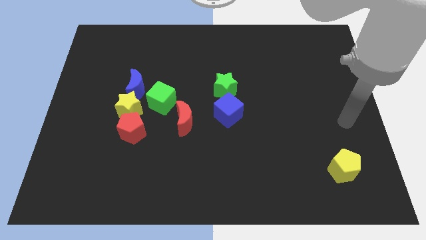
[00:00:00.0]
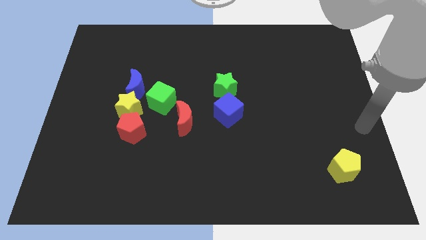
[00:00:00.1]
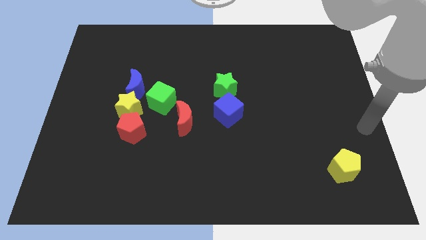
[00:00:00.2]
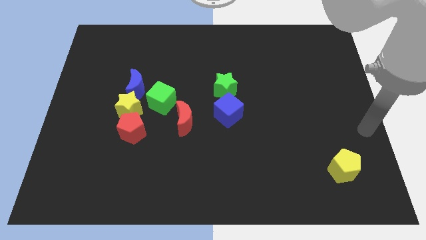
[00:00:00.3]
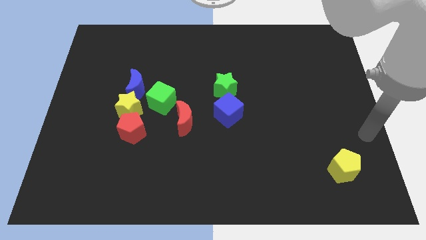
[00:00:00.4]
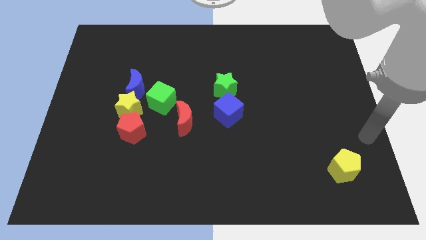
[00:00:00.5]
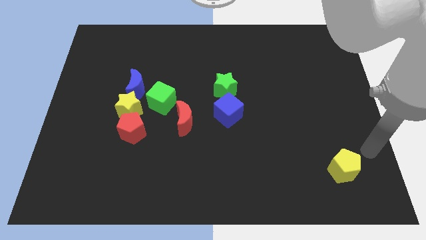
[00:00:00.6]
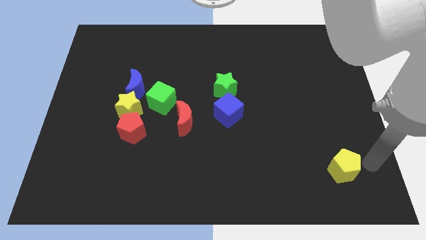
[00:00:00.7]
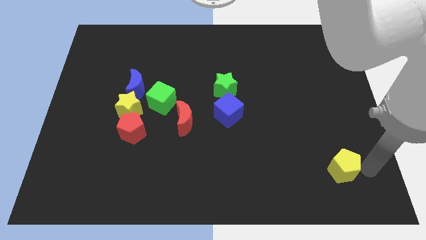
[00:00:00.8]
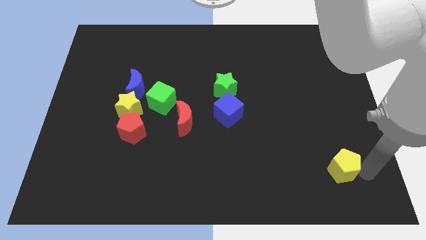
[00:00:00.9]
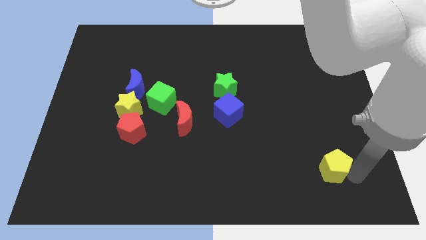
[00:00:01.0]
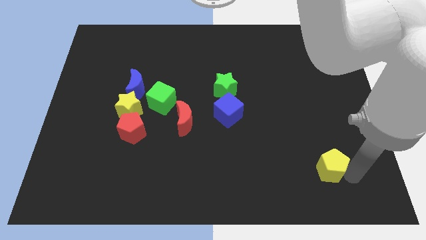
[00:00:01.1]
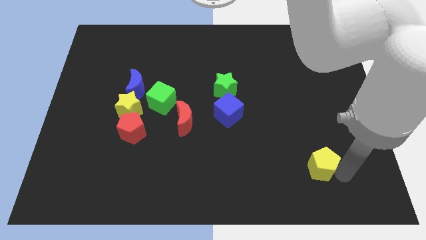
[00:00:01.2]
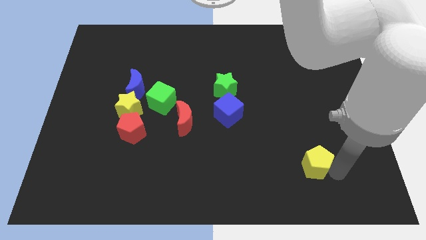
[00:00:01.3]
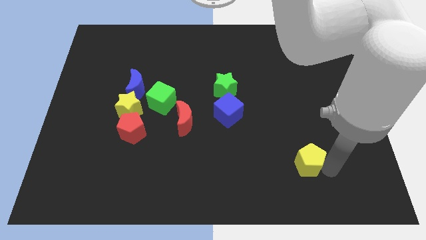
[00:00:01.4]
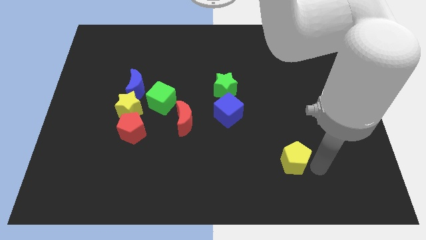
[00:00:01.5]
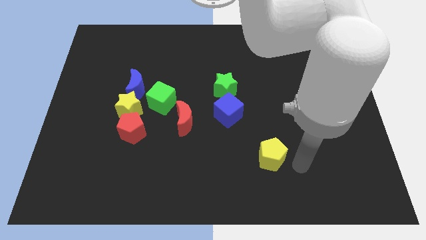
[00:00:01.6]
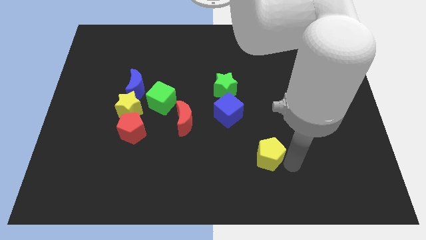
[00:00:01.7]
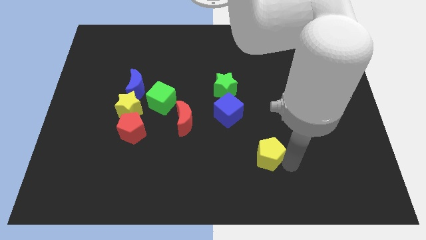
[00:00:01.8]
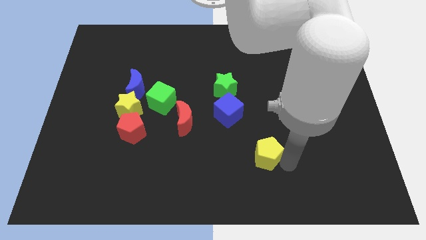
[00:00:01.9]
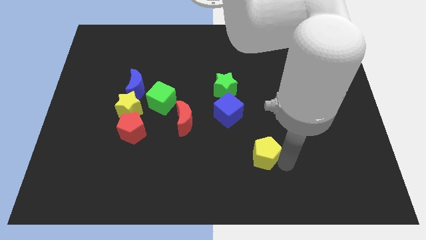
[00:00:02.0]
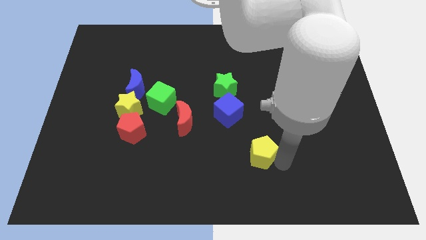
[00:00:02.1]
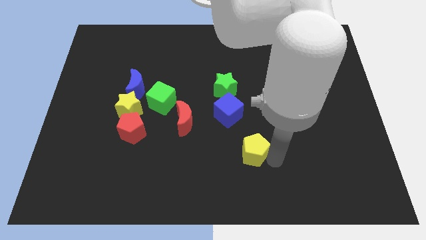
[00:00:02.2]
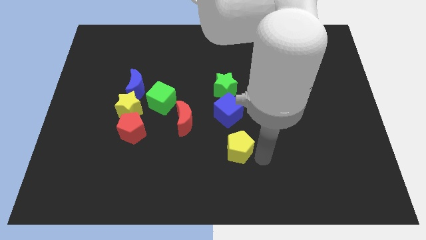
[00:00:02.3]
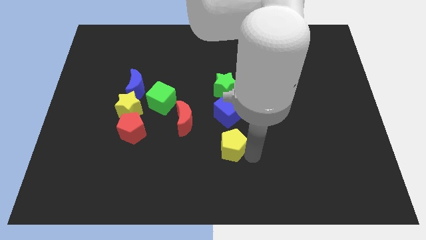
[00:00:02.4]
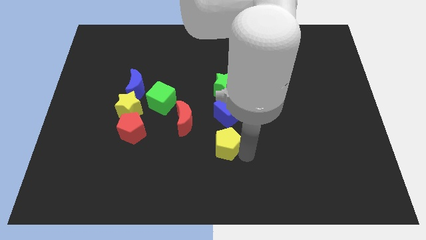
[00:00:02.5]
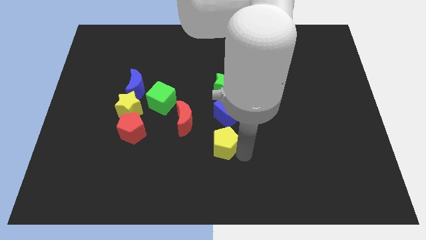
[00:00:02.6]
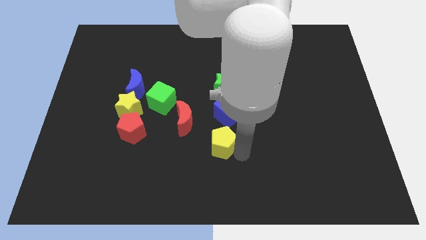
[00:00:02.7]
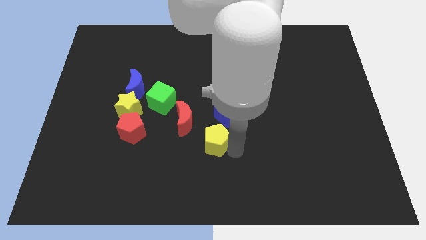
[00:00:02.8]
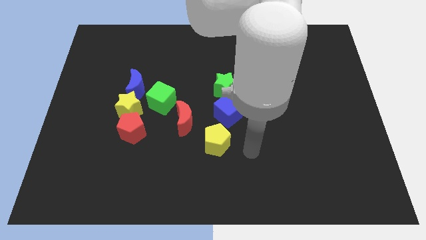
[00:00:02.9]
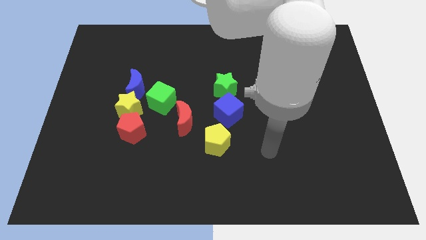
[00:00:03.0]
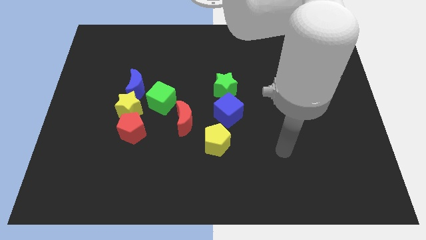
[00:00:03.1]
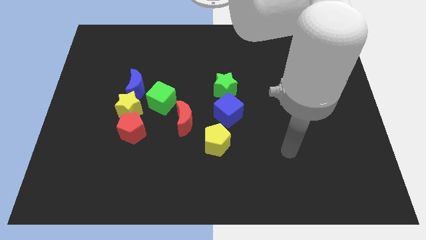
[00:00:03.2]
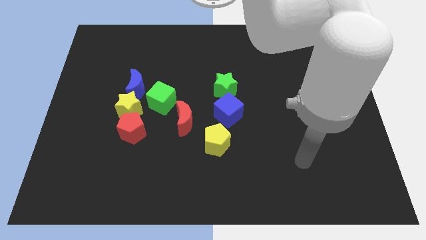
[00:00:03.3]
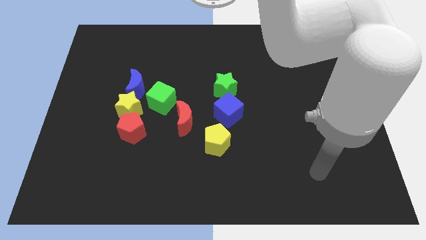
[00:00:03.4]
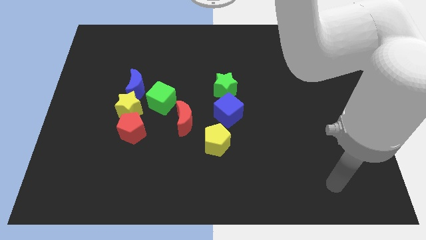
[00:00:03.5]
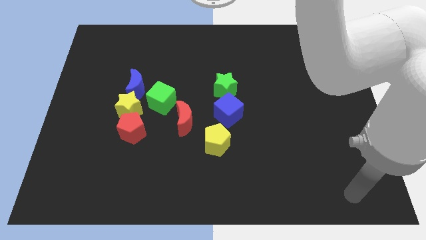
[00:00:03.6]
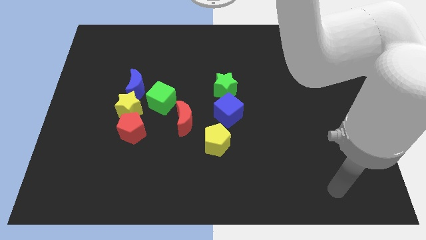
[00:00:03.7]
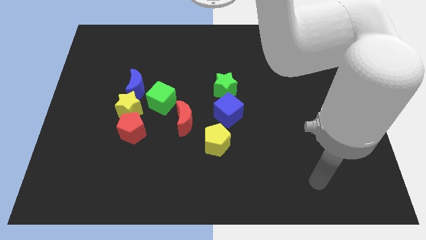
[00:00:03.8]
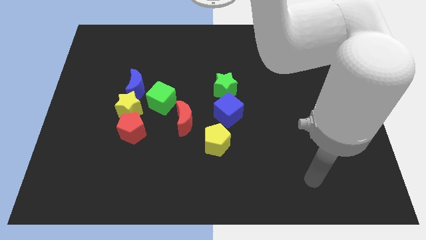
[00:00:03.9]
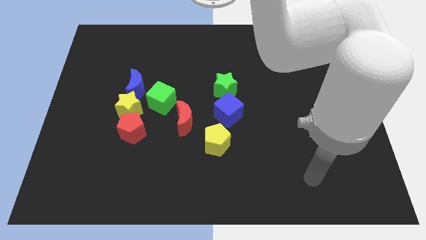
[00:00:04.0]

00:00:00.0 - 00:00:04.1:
push the yellow pentagon towards the group of blocks

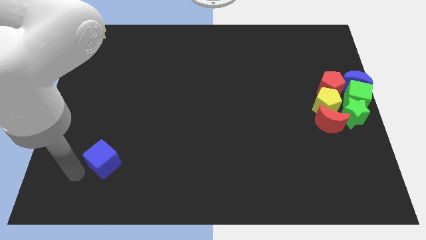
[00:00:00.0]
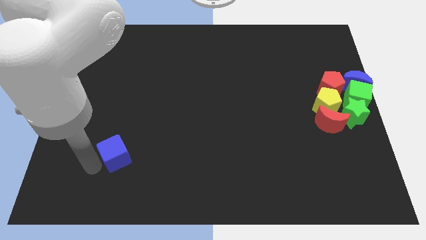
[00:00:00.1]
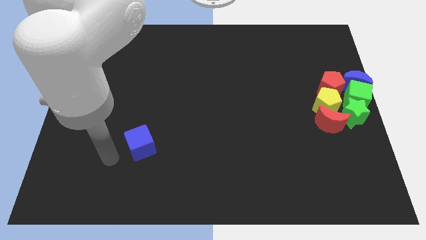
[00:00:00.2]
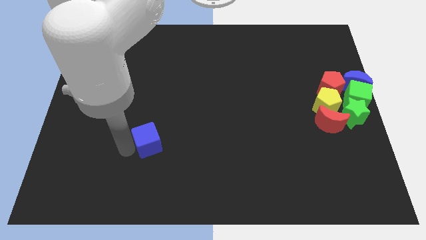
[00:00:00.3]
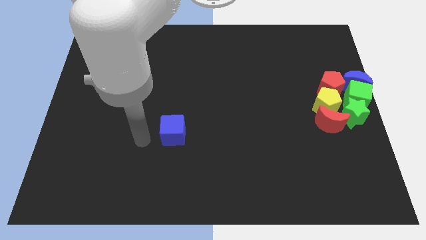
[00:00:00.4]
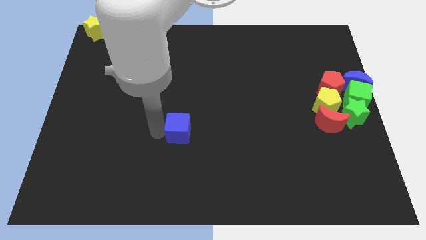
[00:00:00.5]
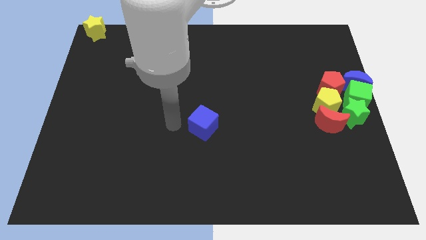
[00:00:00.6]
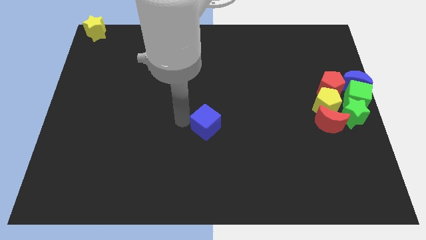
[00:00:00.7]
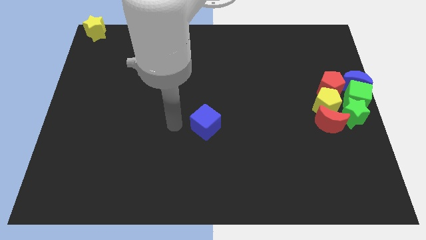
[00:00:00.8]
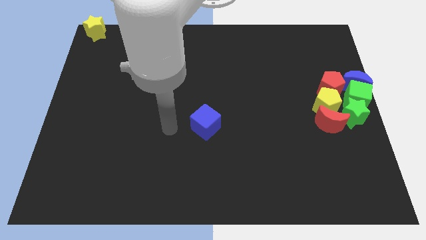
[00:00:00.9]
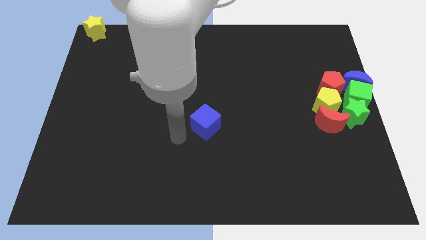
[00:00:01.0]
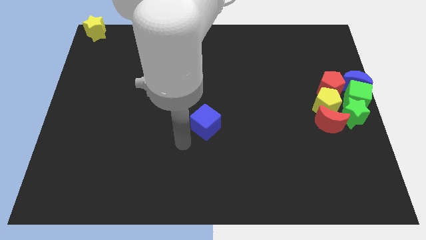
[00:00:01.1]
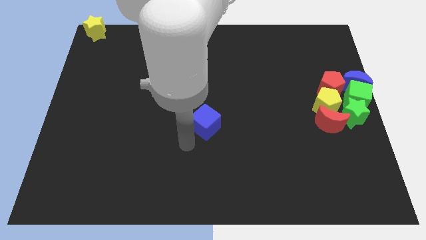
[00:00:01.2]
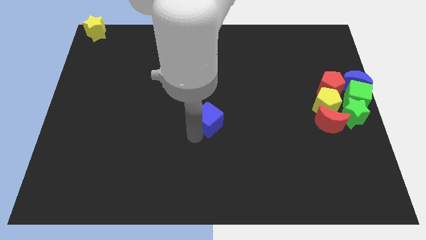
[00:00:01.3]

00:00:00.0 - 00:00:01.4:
place the blue cube towards the centre of the board

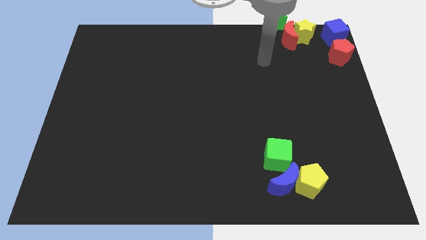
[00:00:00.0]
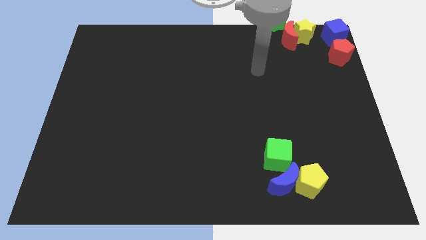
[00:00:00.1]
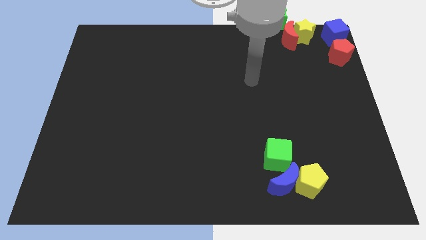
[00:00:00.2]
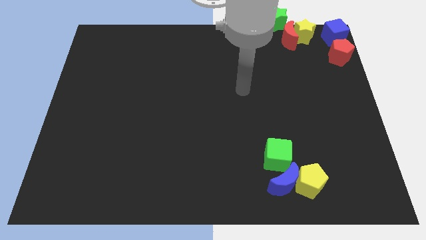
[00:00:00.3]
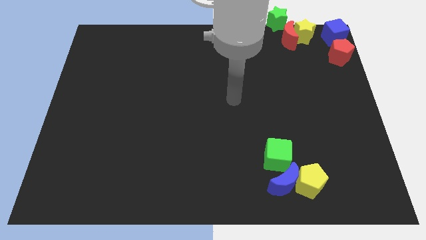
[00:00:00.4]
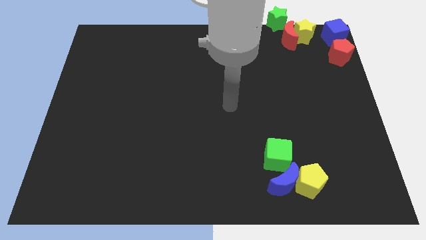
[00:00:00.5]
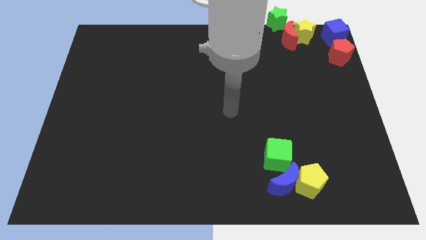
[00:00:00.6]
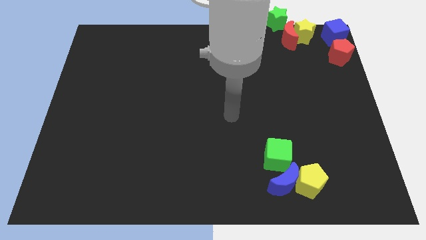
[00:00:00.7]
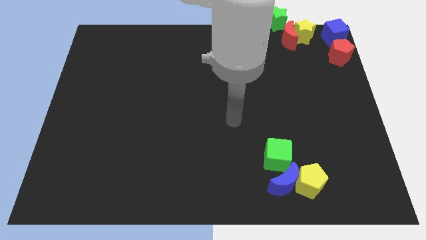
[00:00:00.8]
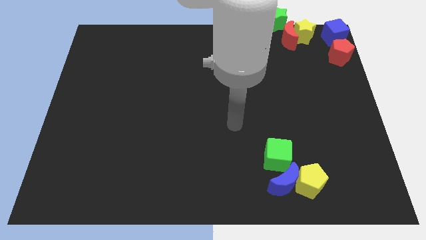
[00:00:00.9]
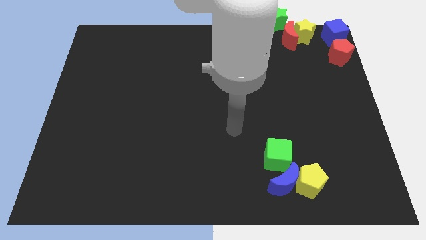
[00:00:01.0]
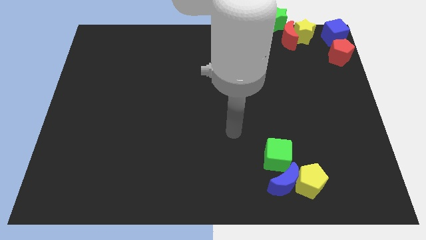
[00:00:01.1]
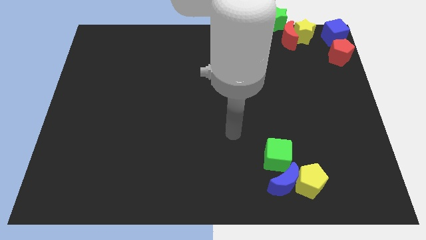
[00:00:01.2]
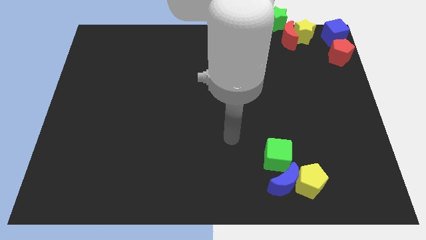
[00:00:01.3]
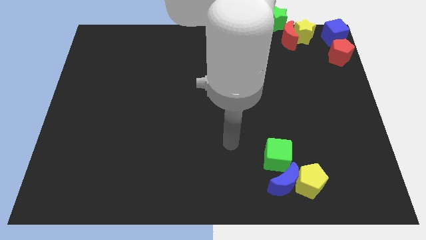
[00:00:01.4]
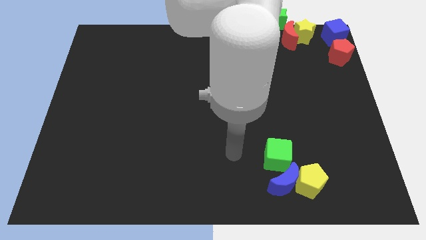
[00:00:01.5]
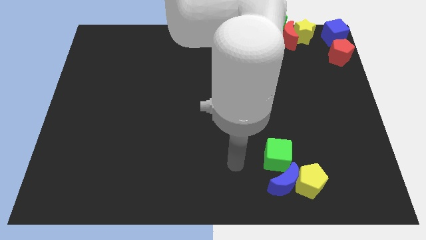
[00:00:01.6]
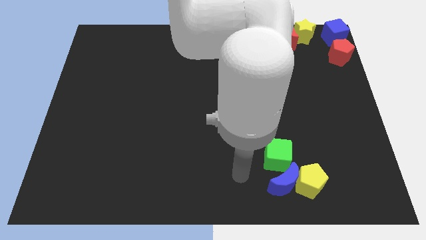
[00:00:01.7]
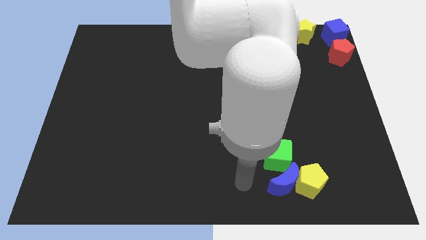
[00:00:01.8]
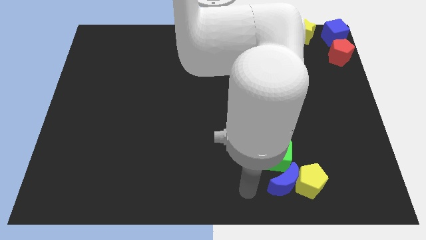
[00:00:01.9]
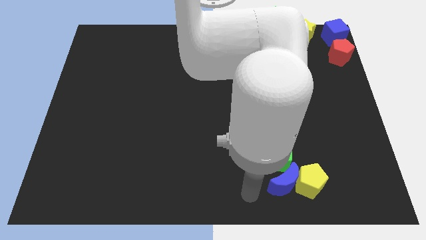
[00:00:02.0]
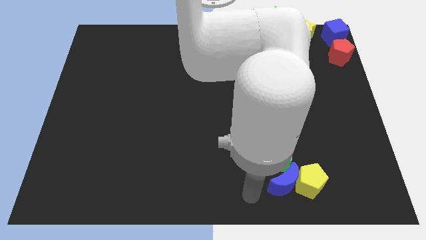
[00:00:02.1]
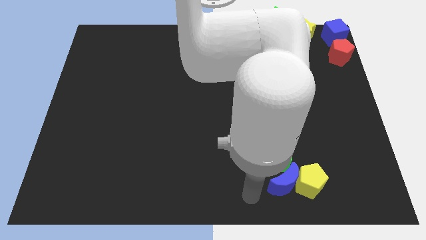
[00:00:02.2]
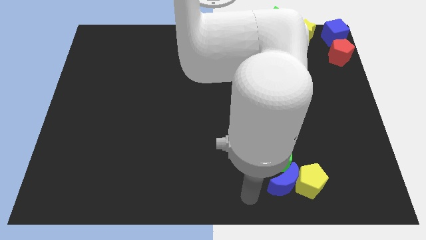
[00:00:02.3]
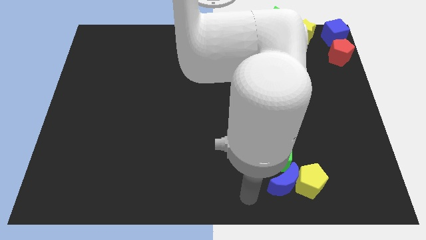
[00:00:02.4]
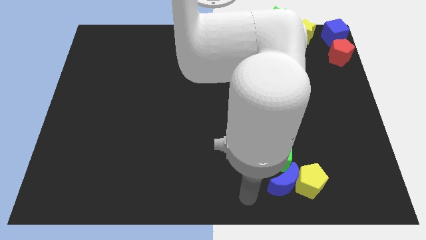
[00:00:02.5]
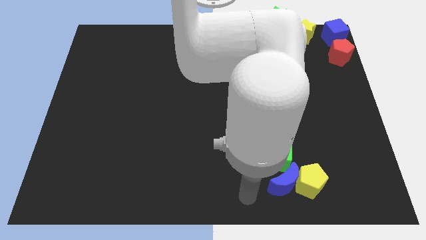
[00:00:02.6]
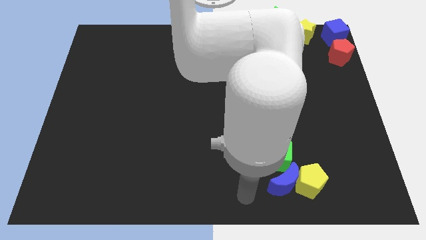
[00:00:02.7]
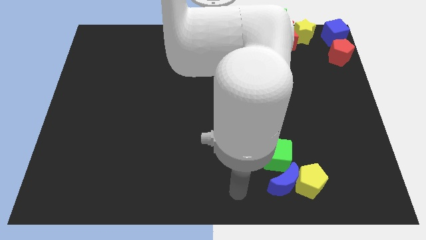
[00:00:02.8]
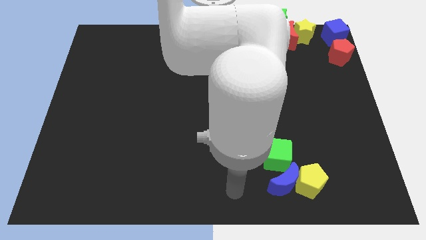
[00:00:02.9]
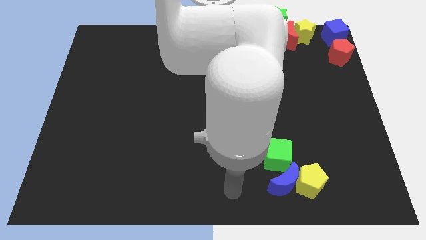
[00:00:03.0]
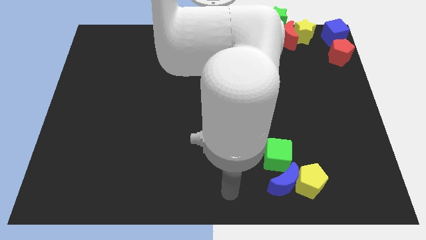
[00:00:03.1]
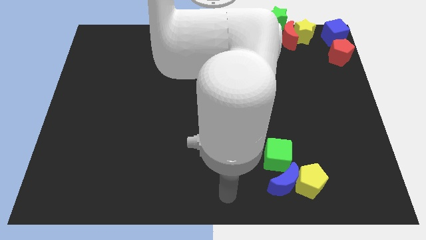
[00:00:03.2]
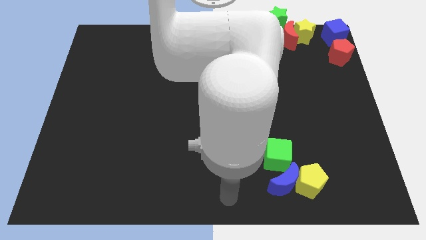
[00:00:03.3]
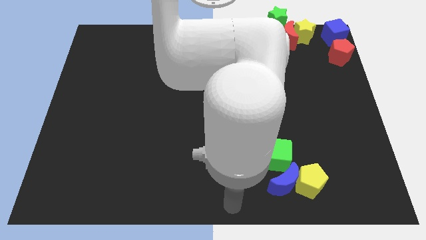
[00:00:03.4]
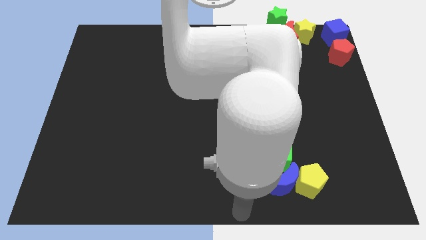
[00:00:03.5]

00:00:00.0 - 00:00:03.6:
put arm at bottom center
